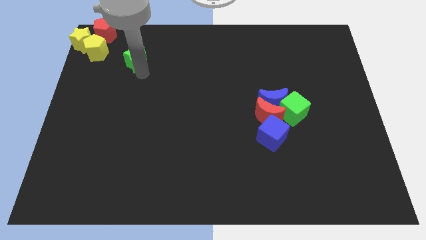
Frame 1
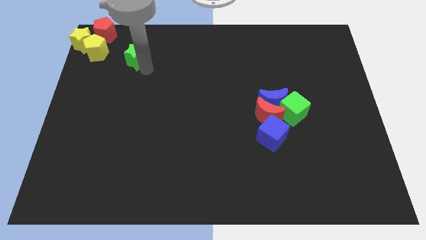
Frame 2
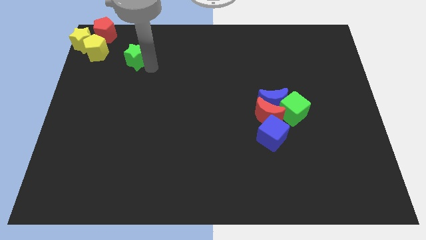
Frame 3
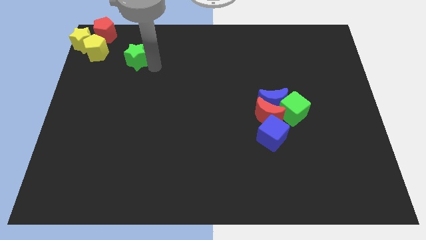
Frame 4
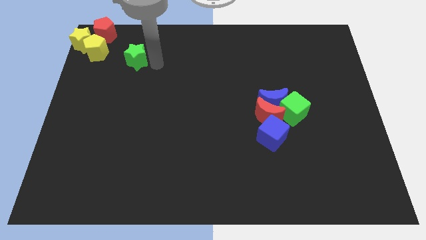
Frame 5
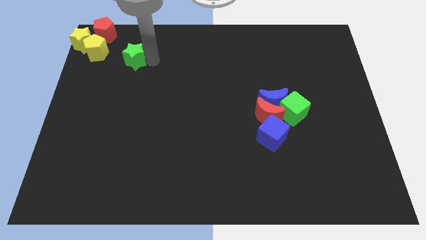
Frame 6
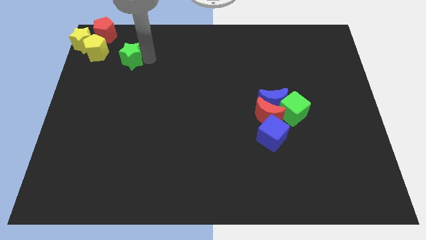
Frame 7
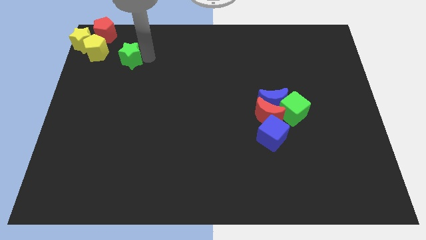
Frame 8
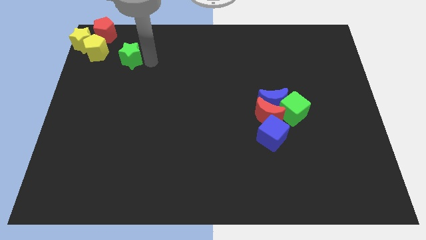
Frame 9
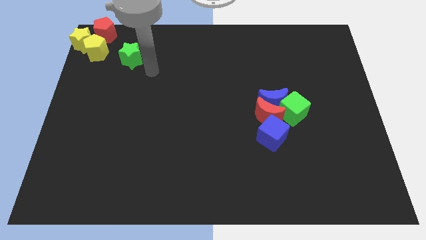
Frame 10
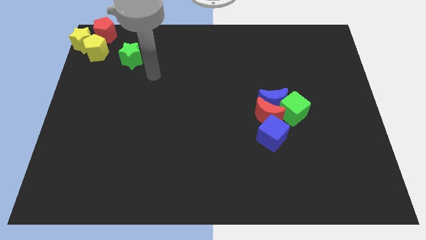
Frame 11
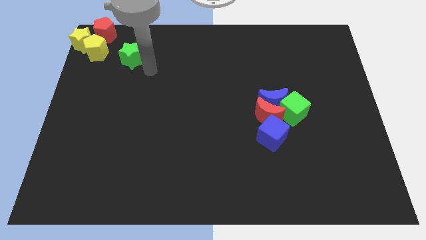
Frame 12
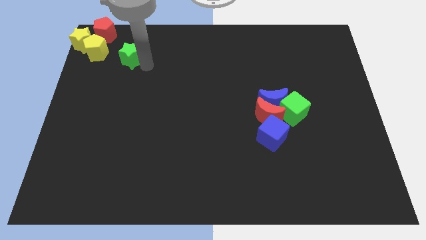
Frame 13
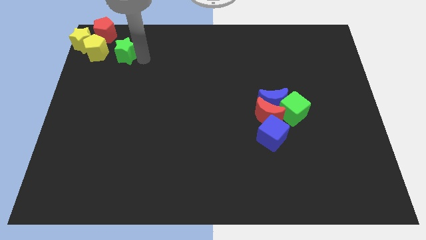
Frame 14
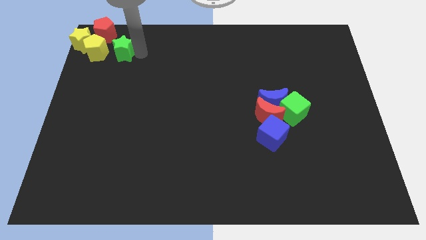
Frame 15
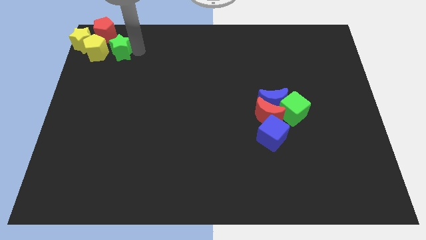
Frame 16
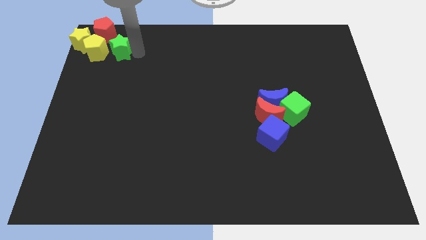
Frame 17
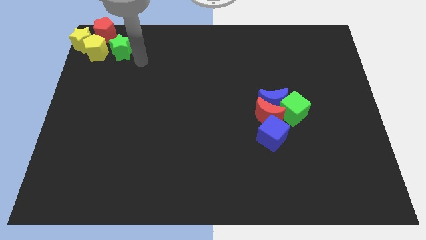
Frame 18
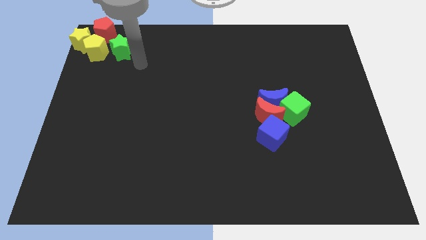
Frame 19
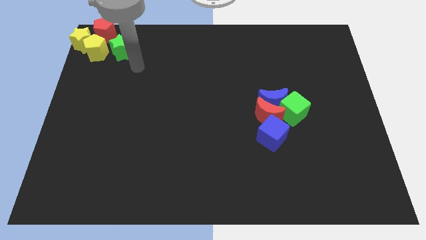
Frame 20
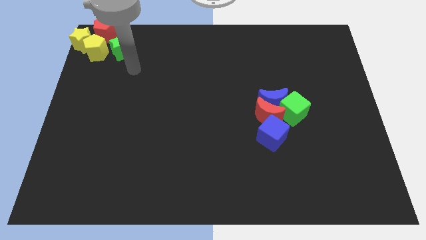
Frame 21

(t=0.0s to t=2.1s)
place the green star to the right side of the yellow pentagon

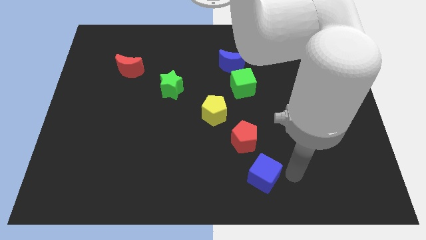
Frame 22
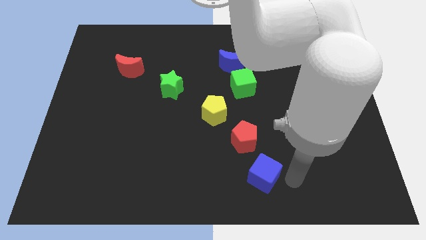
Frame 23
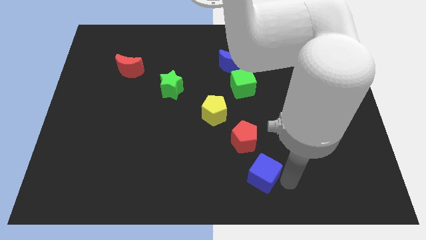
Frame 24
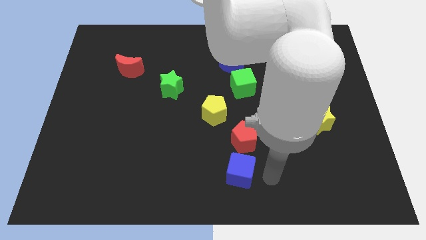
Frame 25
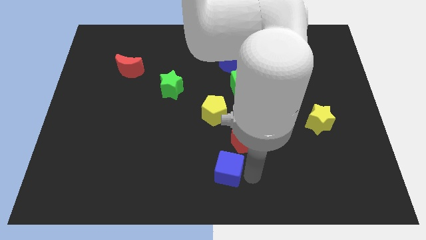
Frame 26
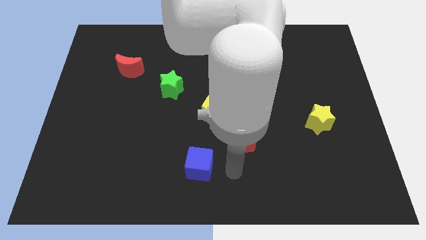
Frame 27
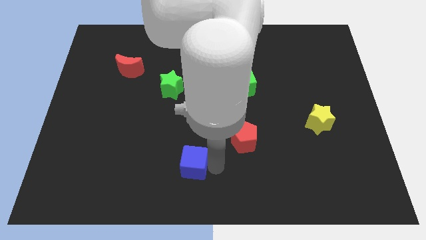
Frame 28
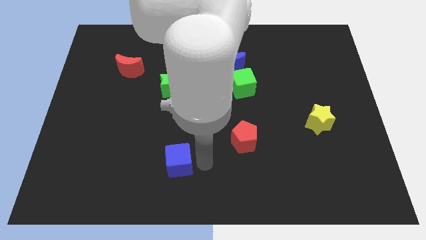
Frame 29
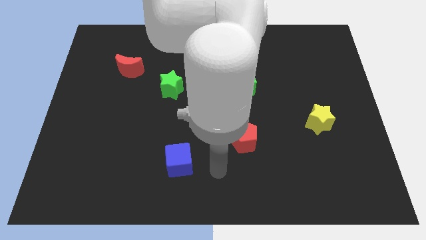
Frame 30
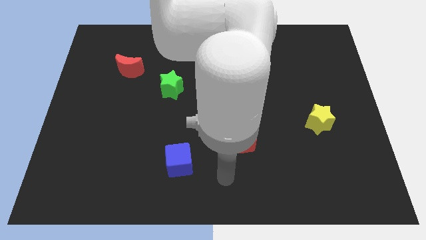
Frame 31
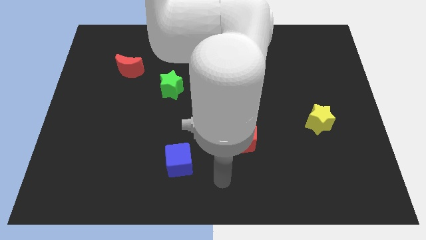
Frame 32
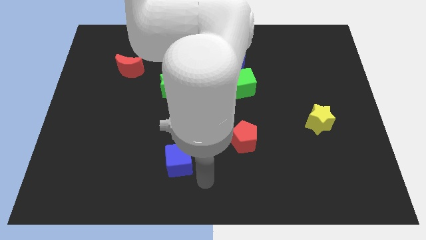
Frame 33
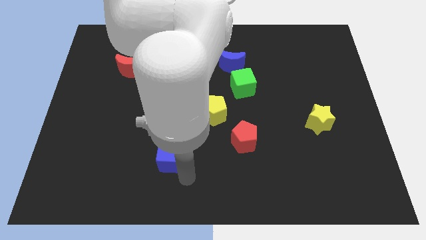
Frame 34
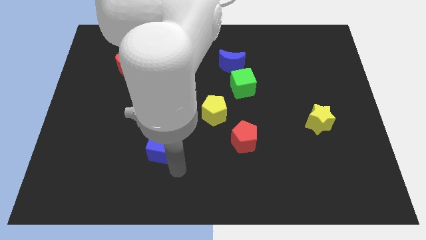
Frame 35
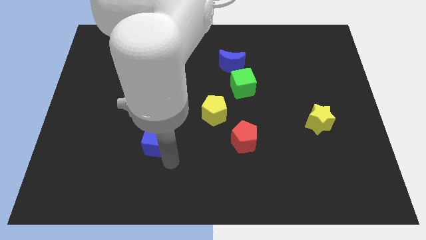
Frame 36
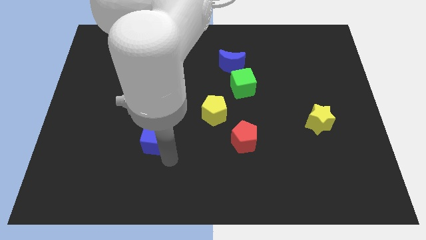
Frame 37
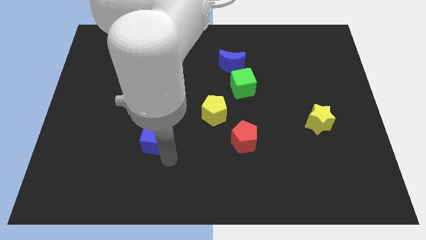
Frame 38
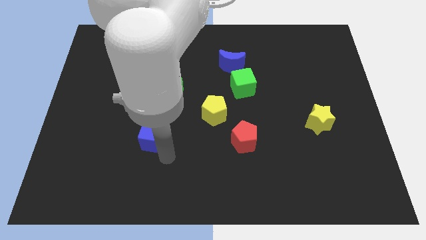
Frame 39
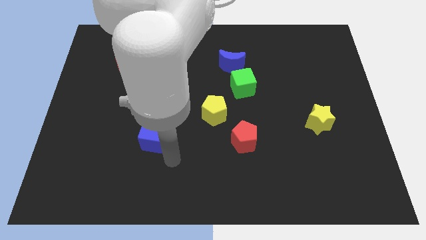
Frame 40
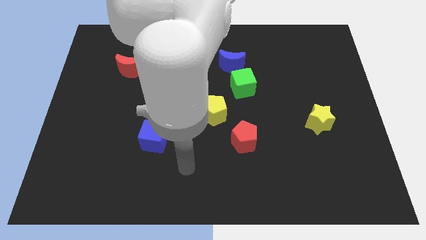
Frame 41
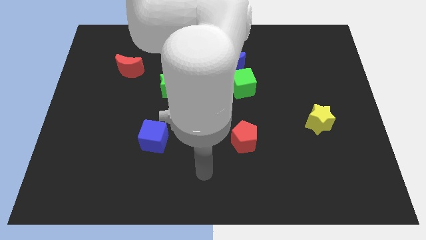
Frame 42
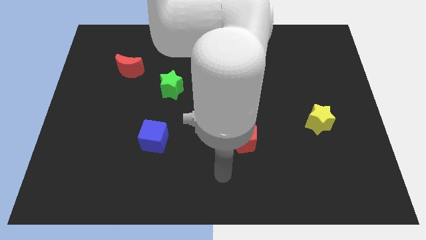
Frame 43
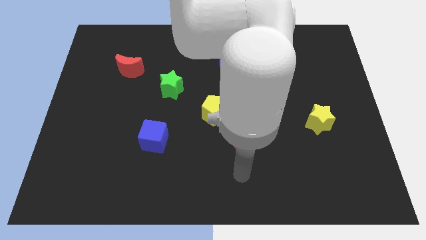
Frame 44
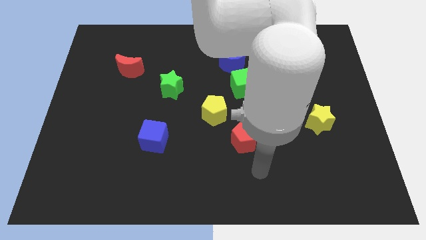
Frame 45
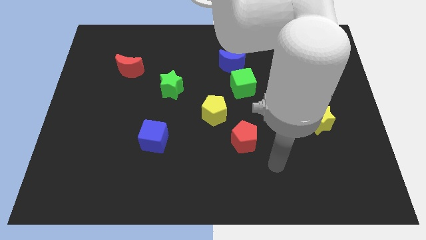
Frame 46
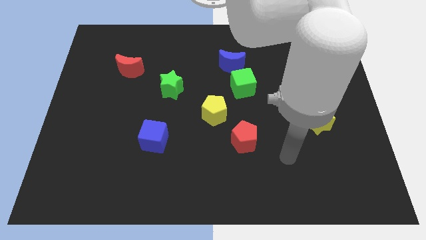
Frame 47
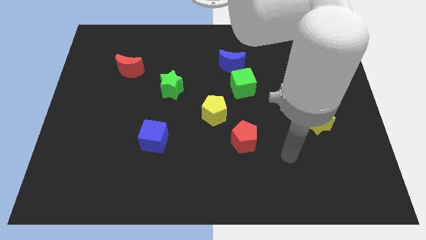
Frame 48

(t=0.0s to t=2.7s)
place the blue cube down to the green star

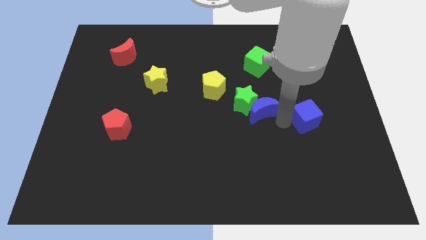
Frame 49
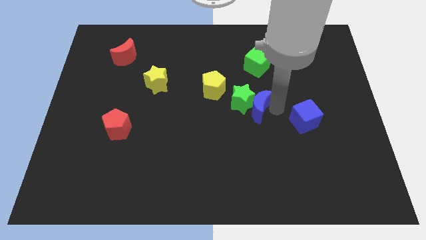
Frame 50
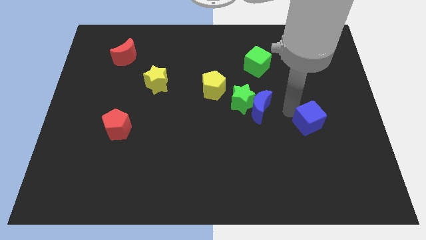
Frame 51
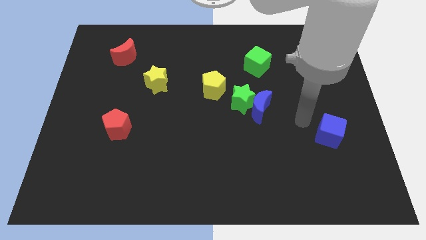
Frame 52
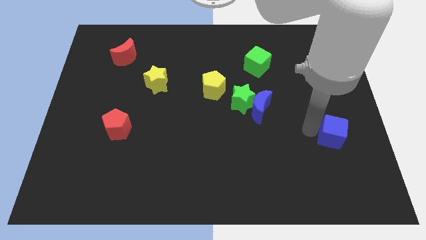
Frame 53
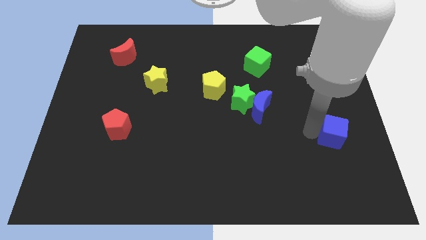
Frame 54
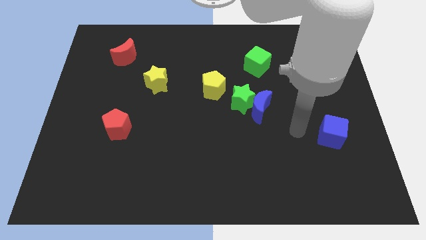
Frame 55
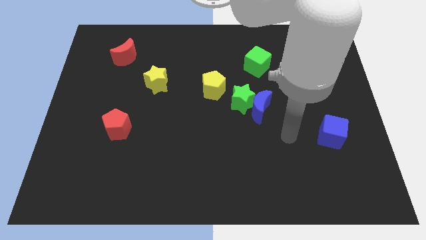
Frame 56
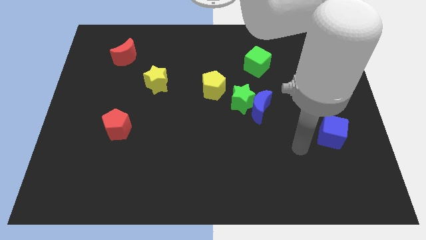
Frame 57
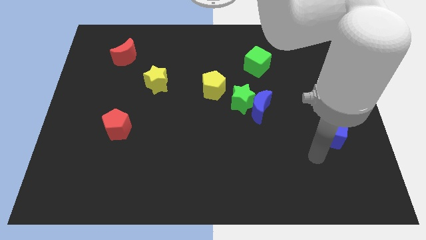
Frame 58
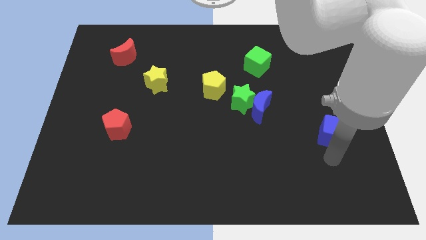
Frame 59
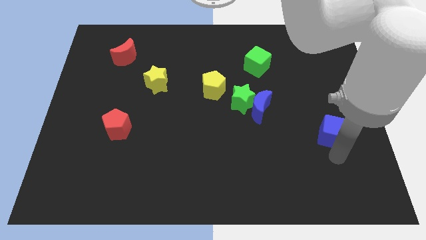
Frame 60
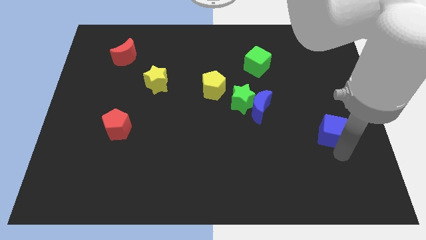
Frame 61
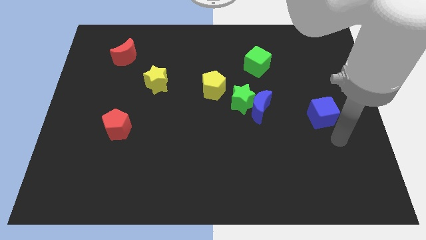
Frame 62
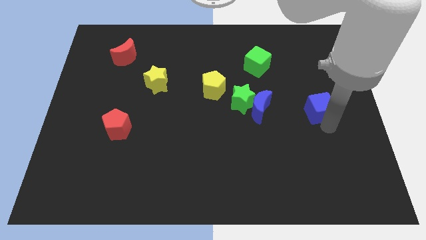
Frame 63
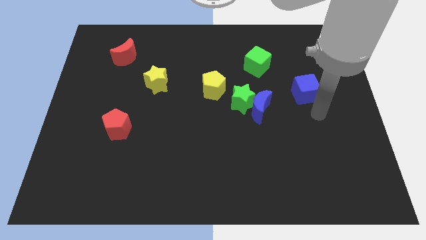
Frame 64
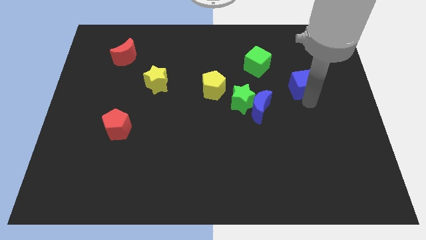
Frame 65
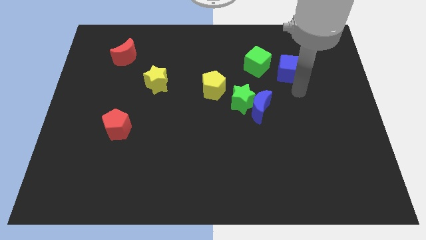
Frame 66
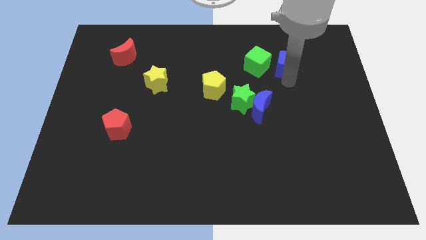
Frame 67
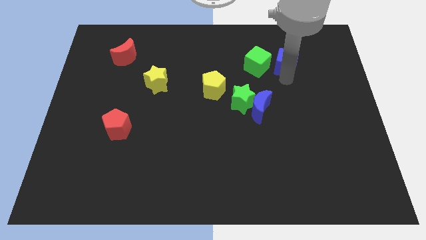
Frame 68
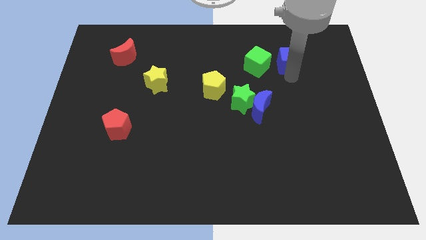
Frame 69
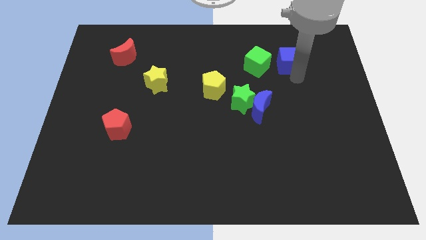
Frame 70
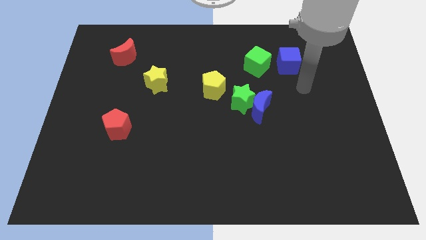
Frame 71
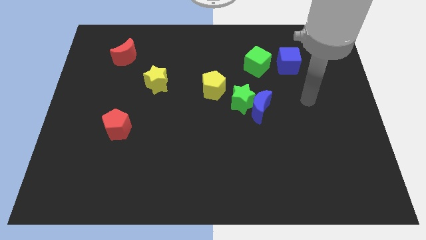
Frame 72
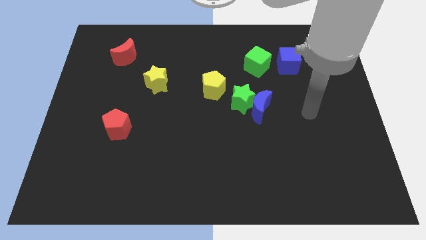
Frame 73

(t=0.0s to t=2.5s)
place the blue cube at the right of the green cube

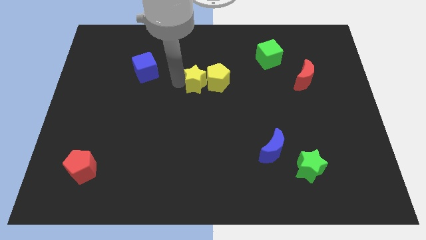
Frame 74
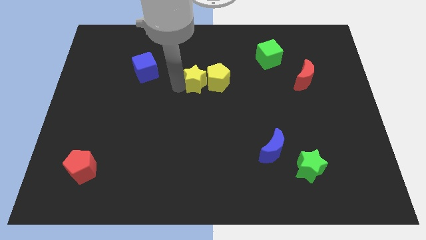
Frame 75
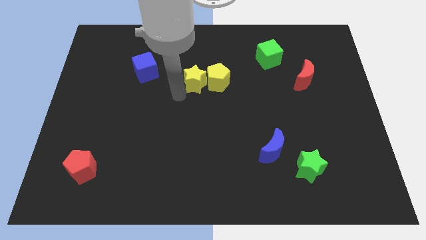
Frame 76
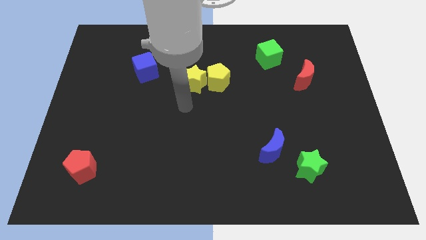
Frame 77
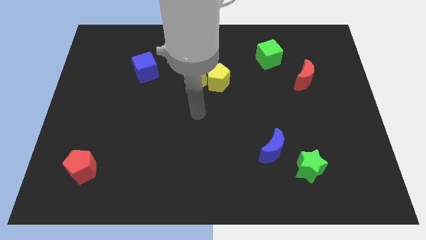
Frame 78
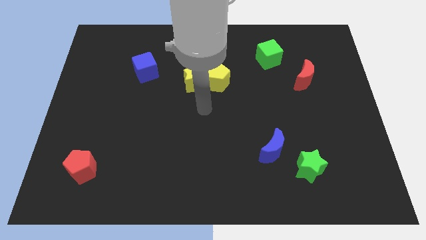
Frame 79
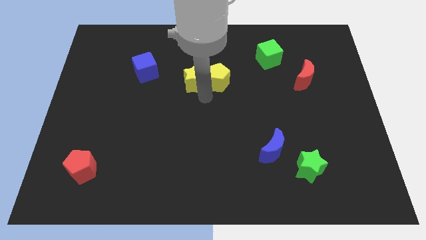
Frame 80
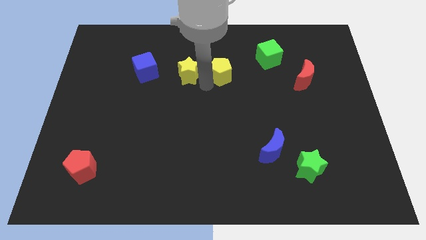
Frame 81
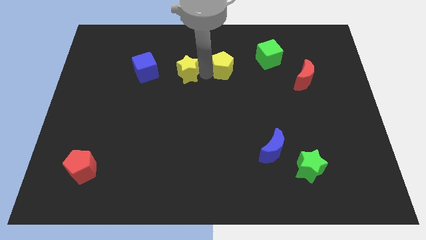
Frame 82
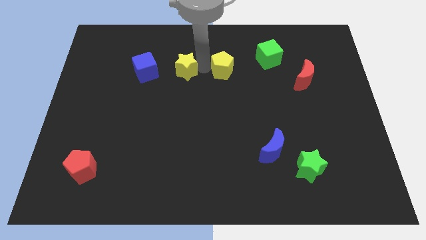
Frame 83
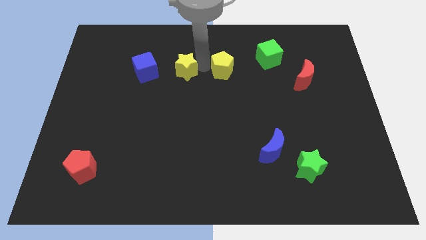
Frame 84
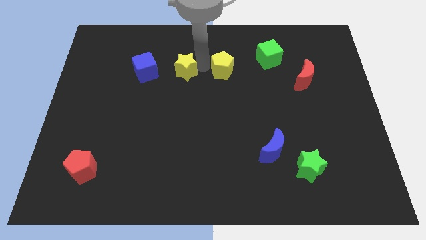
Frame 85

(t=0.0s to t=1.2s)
separate yellow star and yellow pentagon

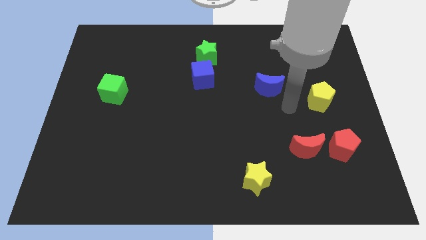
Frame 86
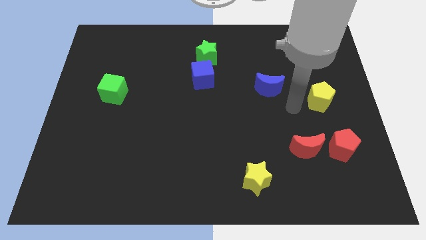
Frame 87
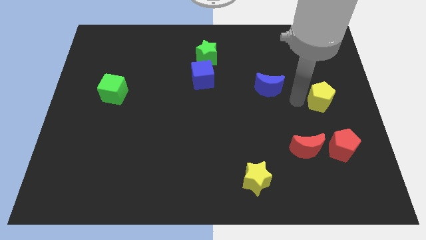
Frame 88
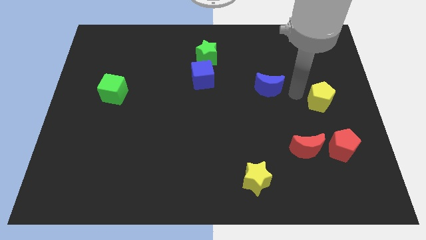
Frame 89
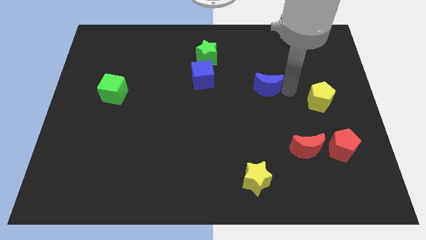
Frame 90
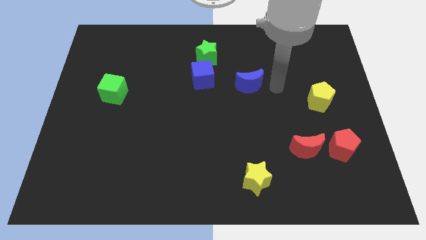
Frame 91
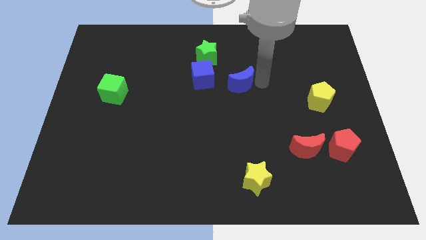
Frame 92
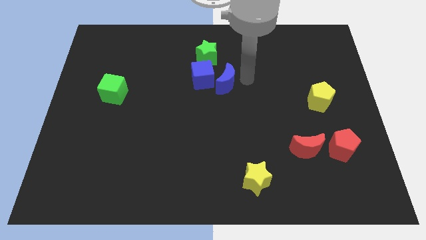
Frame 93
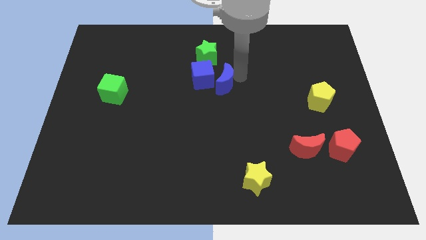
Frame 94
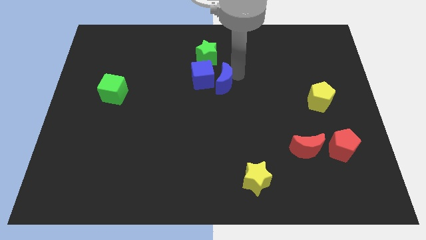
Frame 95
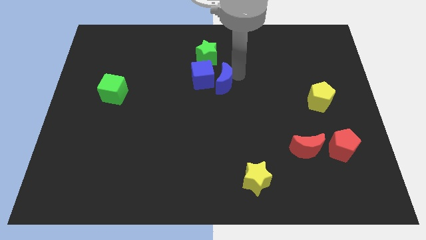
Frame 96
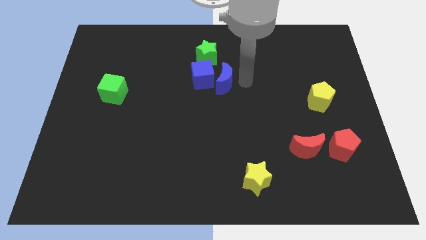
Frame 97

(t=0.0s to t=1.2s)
push the blue crescent close to the blue cube
